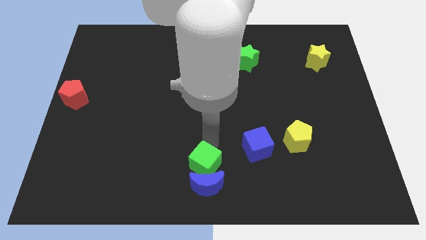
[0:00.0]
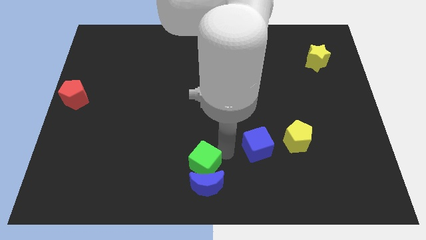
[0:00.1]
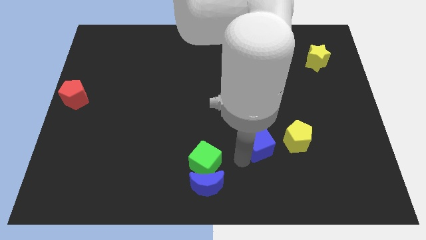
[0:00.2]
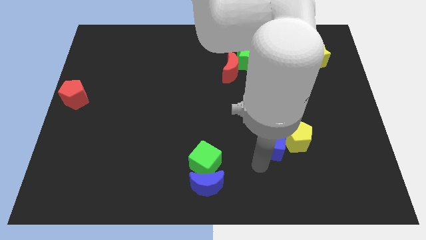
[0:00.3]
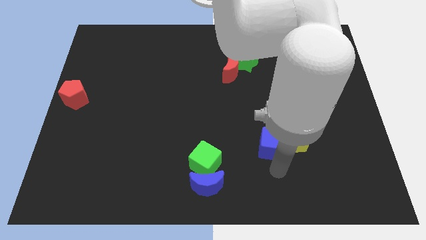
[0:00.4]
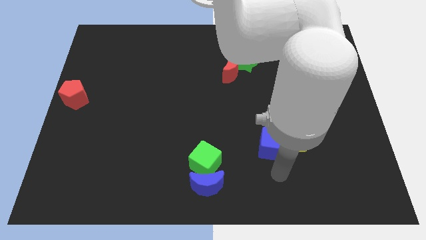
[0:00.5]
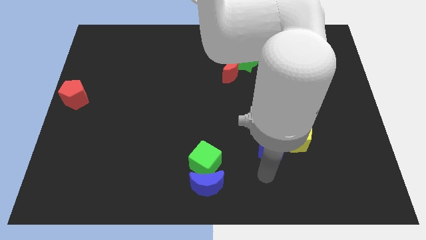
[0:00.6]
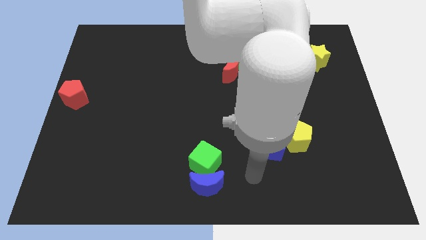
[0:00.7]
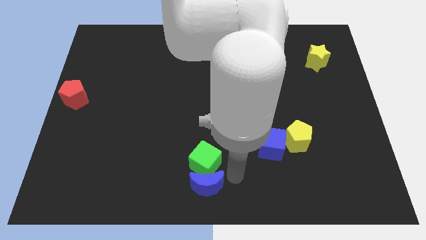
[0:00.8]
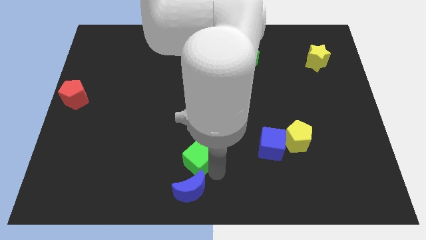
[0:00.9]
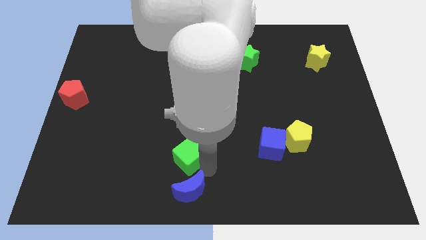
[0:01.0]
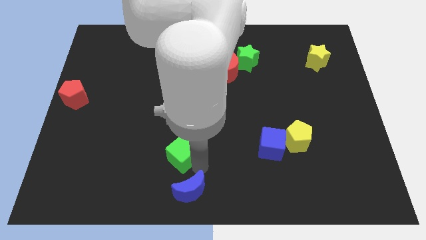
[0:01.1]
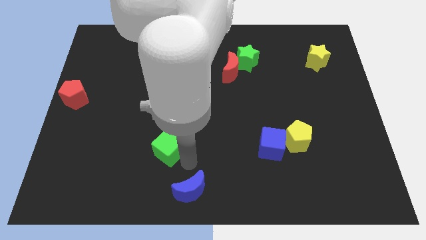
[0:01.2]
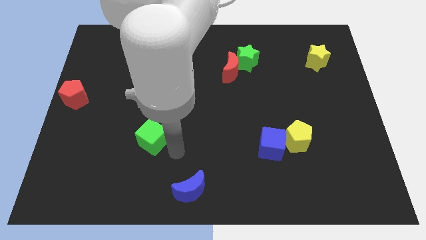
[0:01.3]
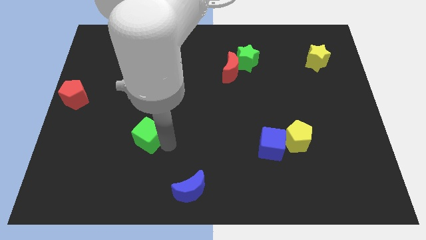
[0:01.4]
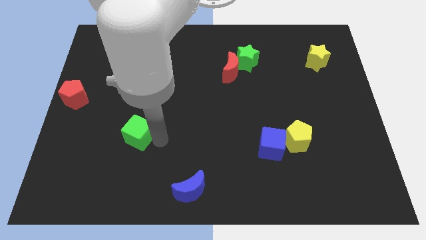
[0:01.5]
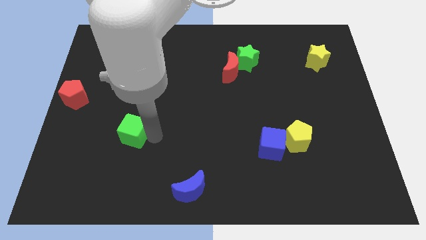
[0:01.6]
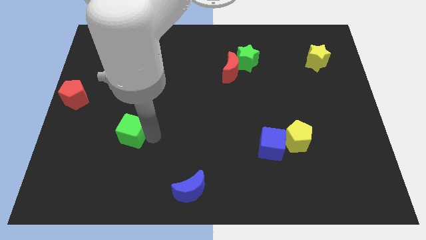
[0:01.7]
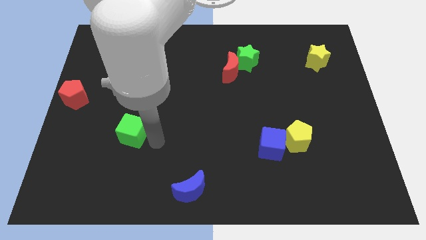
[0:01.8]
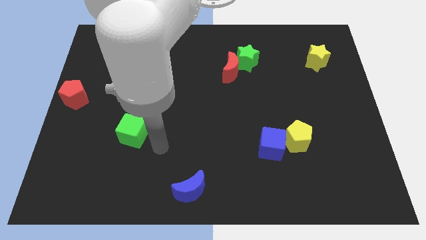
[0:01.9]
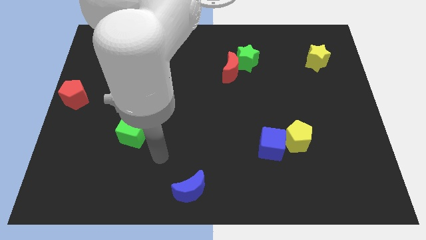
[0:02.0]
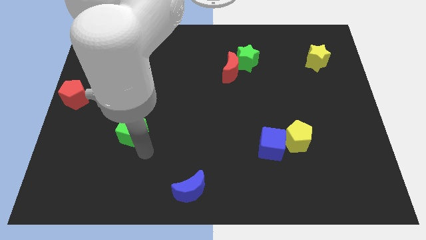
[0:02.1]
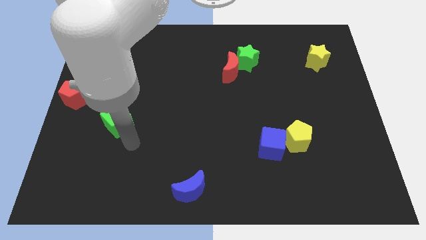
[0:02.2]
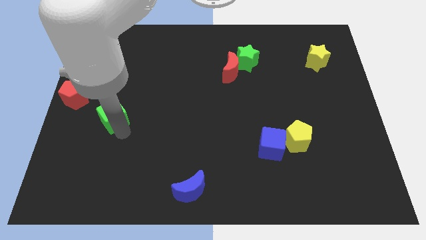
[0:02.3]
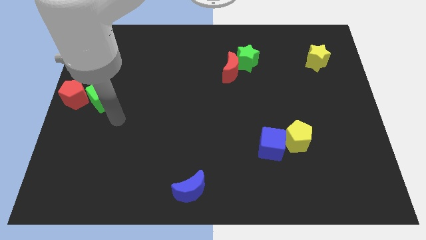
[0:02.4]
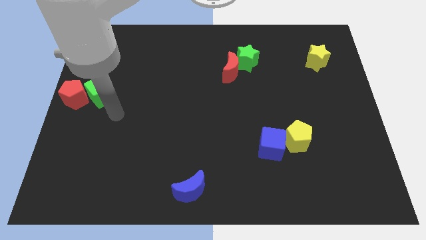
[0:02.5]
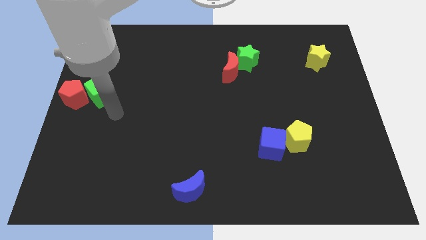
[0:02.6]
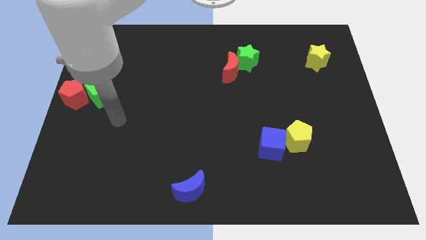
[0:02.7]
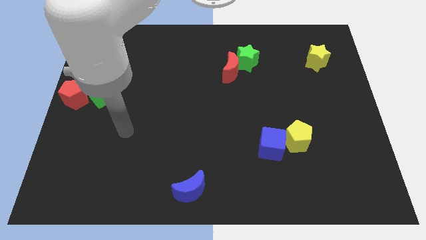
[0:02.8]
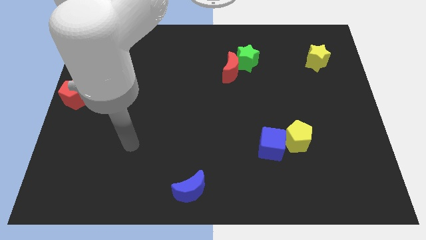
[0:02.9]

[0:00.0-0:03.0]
push the green cube to the right side of the red pentagon

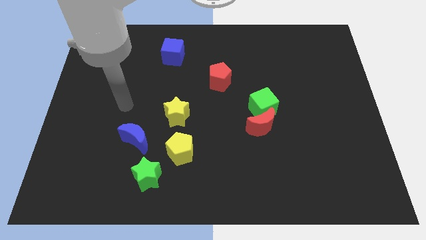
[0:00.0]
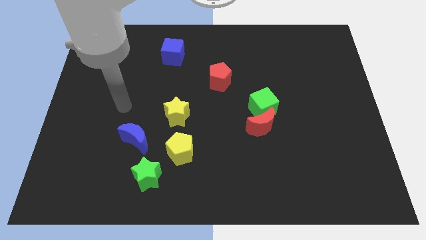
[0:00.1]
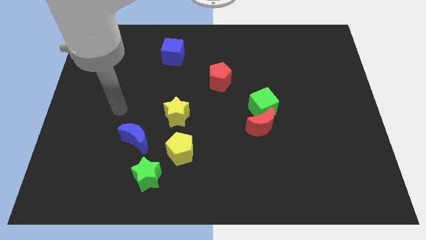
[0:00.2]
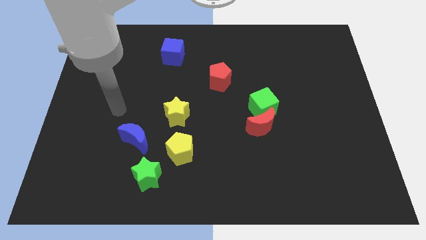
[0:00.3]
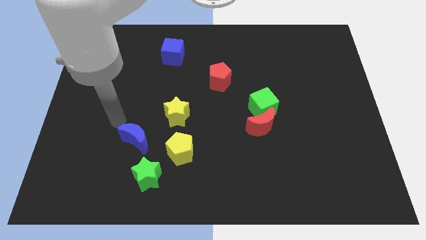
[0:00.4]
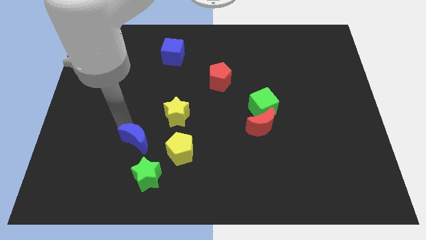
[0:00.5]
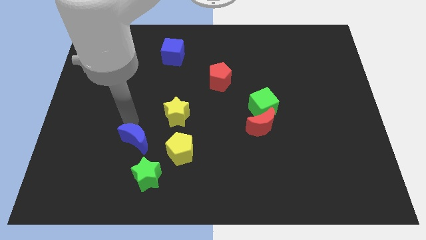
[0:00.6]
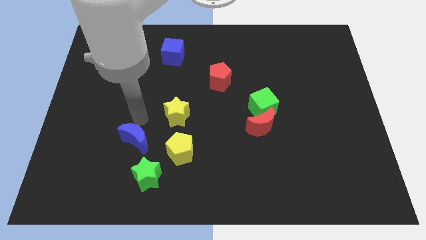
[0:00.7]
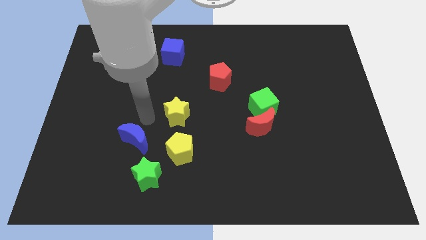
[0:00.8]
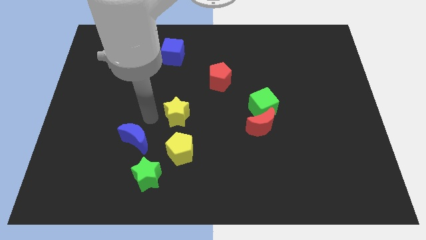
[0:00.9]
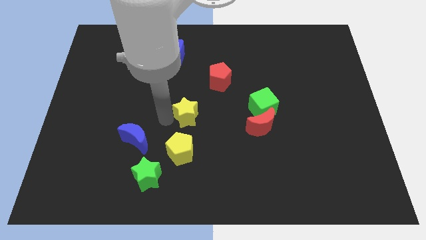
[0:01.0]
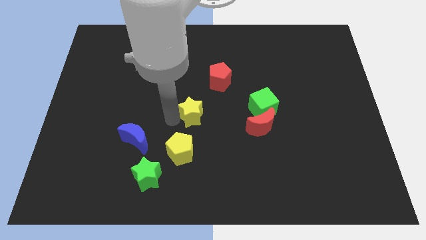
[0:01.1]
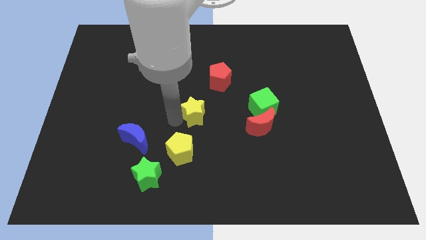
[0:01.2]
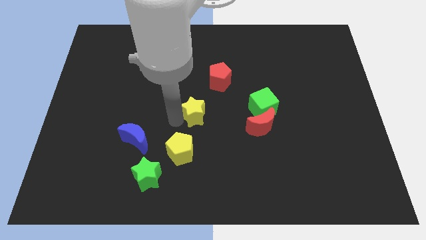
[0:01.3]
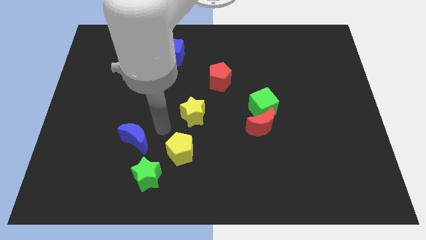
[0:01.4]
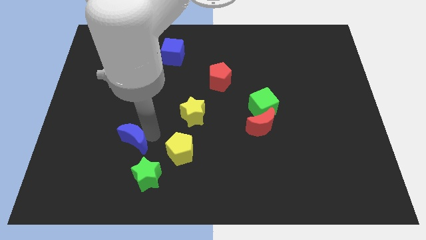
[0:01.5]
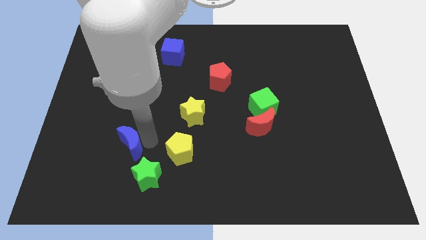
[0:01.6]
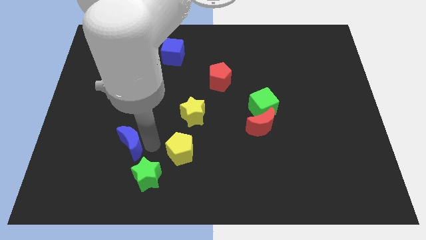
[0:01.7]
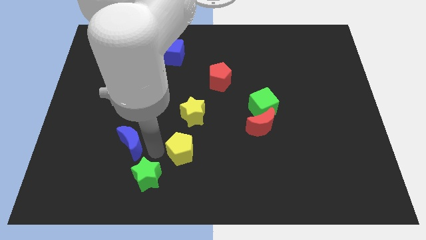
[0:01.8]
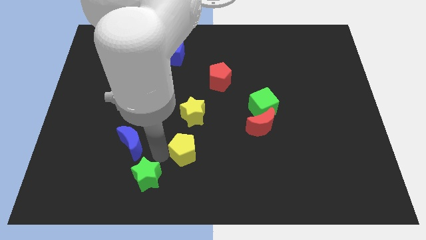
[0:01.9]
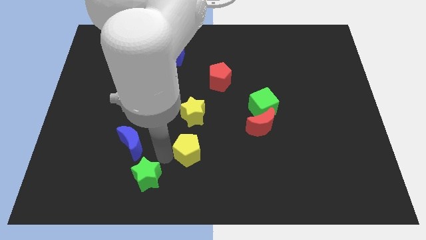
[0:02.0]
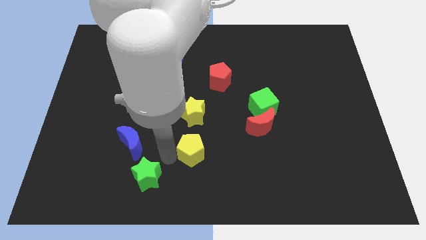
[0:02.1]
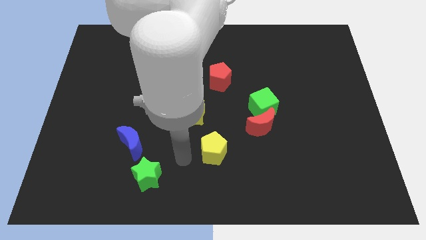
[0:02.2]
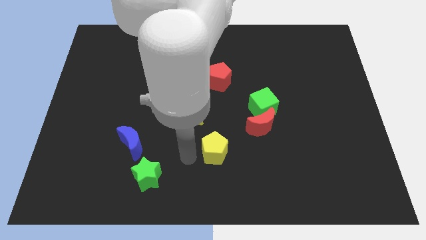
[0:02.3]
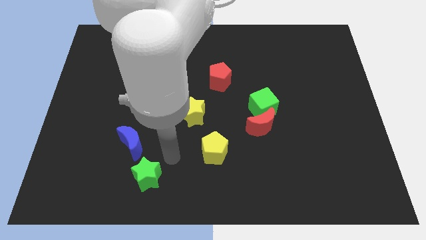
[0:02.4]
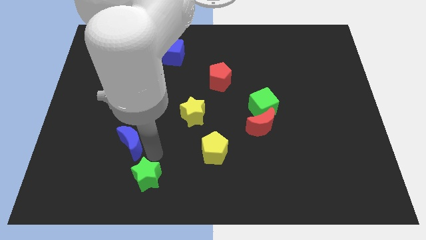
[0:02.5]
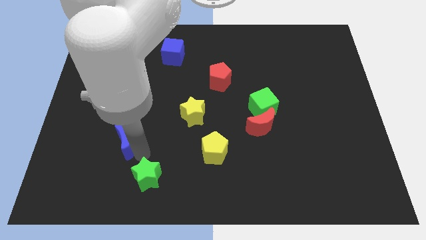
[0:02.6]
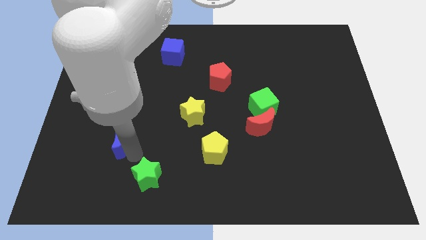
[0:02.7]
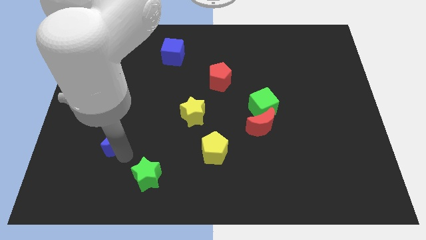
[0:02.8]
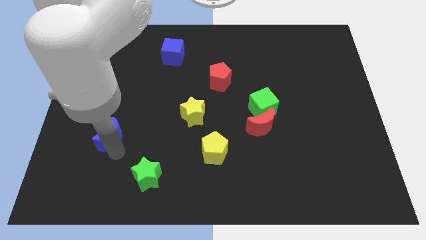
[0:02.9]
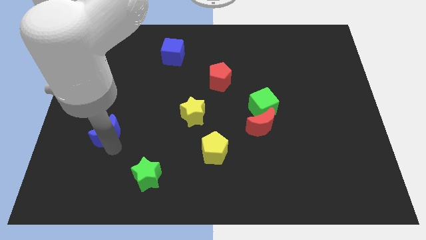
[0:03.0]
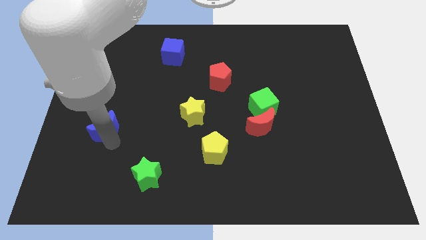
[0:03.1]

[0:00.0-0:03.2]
place the blue crescent diagonally above the green star

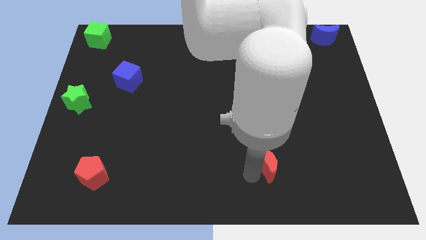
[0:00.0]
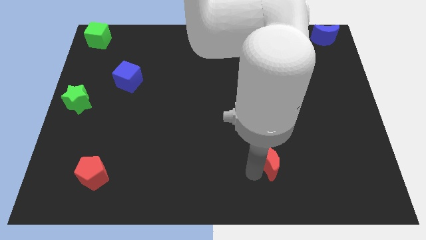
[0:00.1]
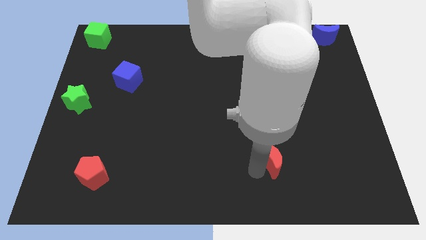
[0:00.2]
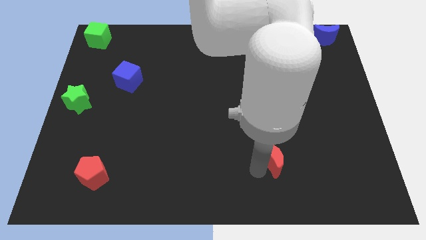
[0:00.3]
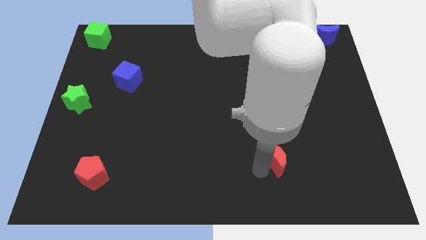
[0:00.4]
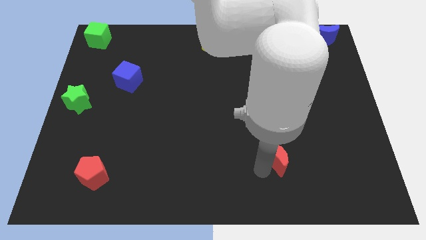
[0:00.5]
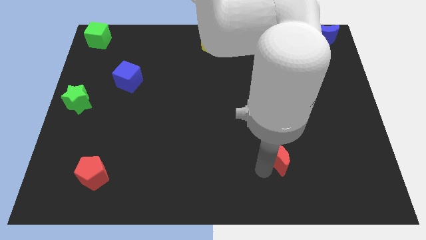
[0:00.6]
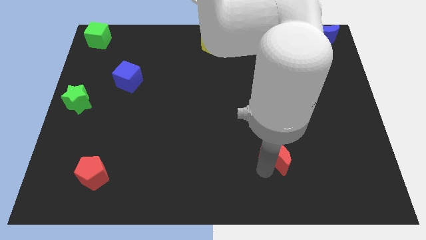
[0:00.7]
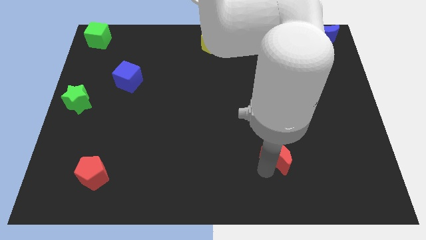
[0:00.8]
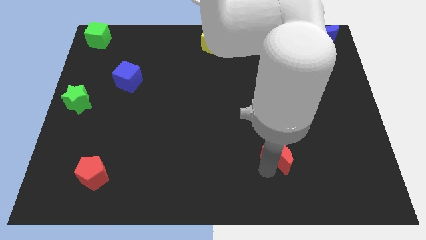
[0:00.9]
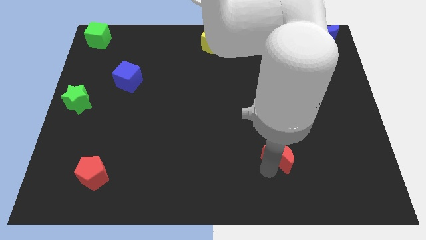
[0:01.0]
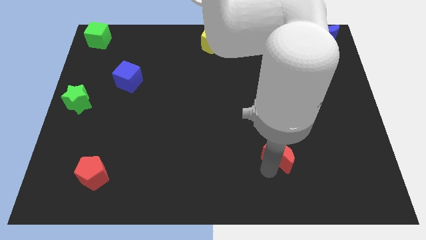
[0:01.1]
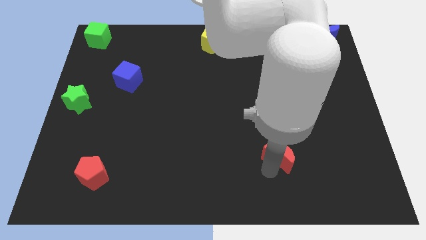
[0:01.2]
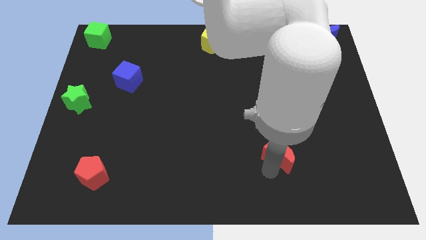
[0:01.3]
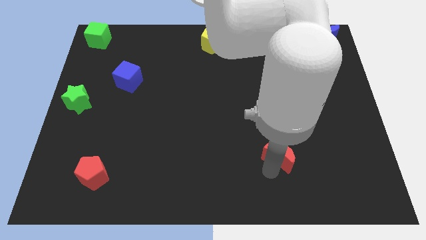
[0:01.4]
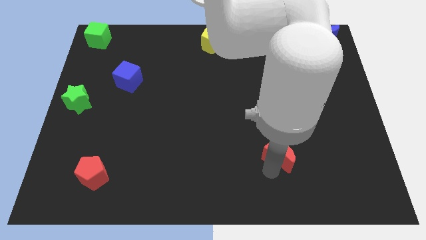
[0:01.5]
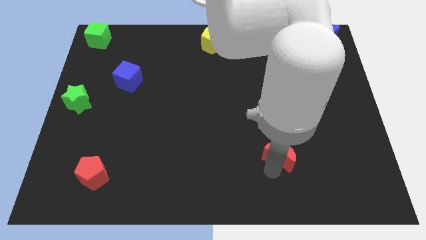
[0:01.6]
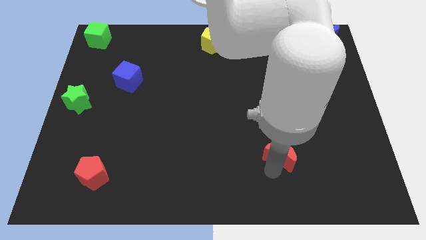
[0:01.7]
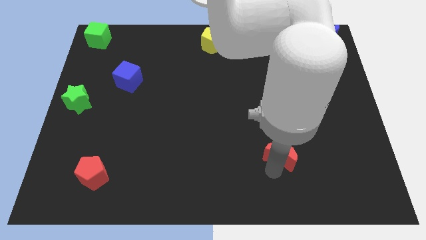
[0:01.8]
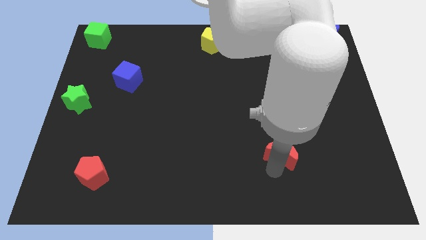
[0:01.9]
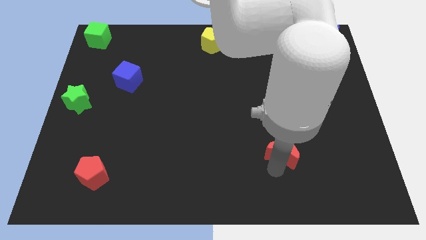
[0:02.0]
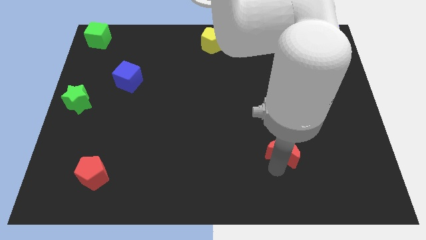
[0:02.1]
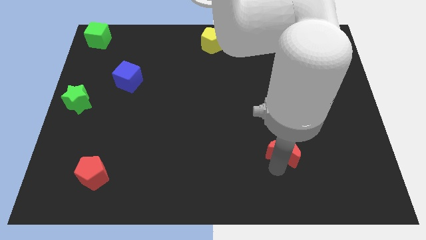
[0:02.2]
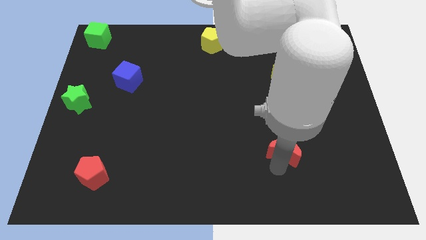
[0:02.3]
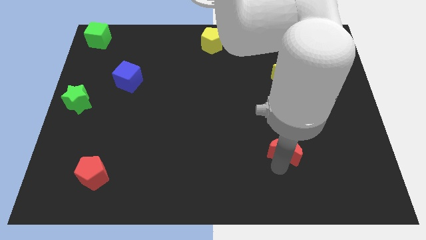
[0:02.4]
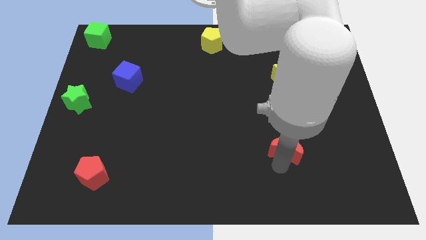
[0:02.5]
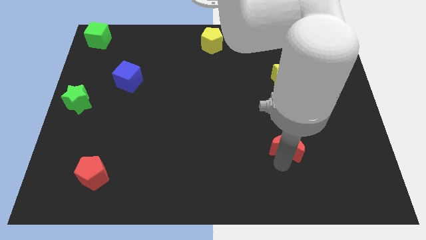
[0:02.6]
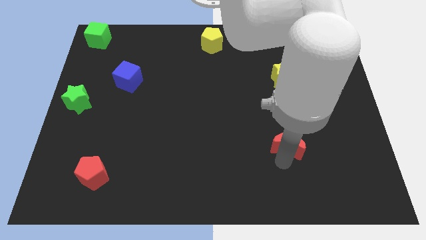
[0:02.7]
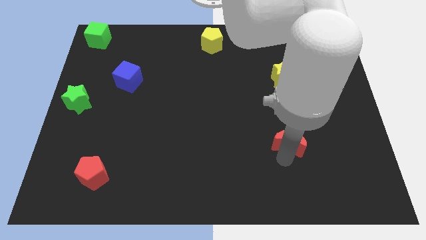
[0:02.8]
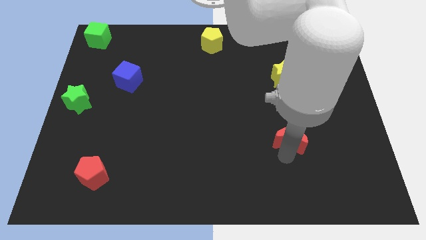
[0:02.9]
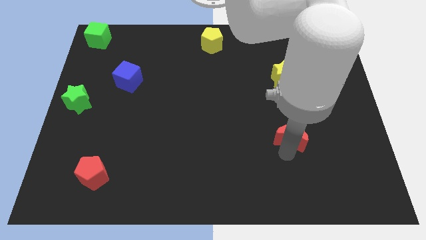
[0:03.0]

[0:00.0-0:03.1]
place the red moon vertically parallel to the yellow star
